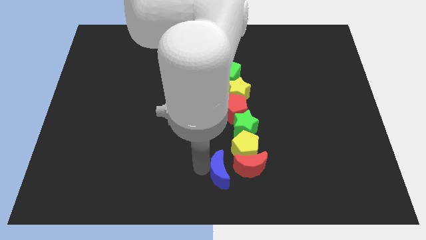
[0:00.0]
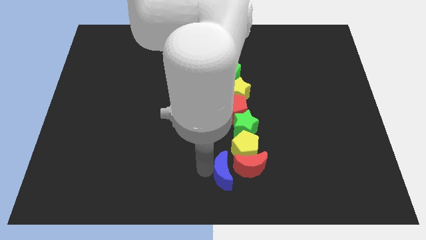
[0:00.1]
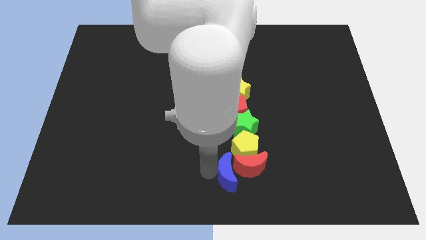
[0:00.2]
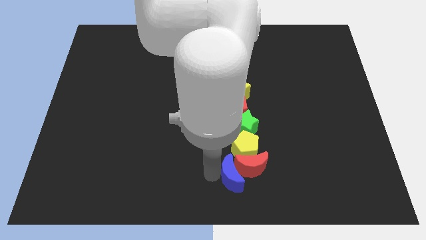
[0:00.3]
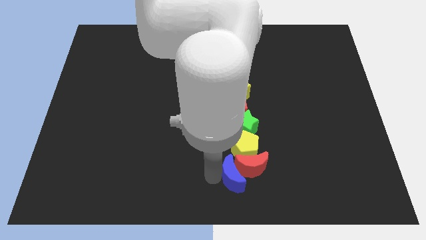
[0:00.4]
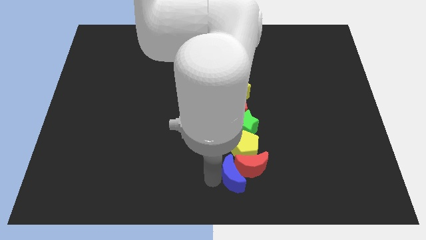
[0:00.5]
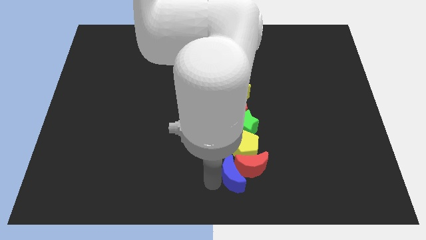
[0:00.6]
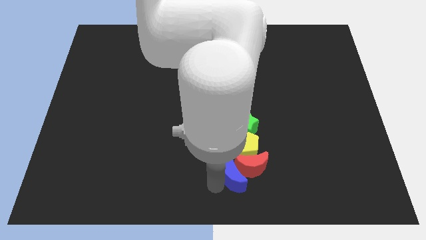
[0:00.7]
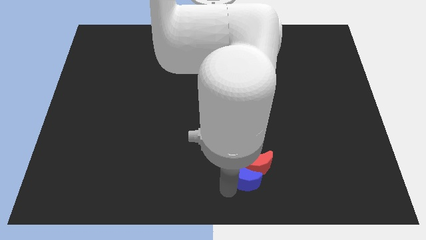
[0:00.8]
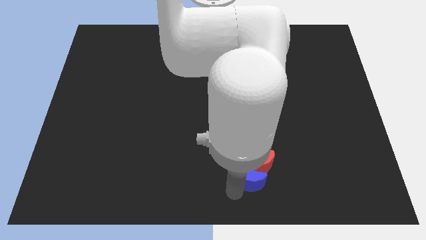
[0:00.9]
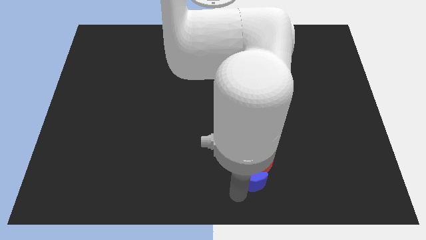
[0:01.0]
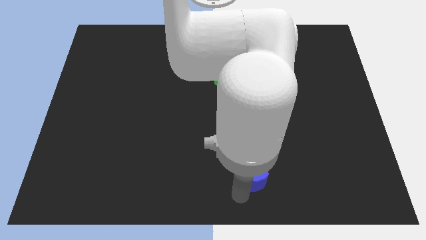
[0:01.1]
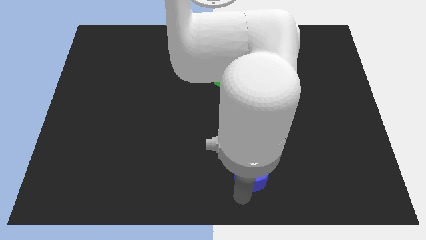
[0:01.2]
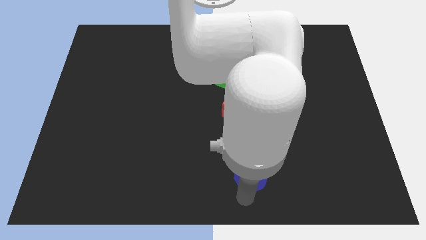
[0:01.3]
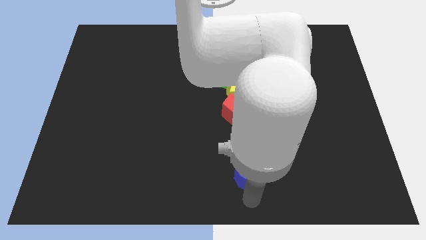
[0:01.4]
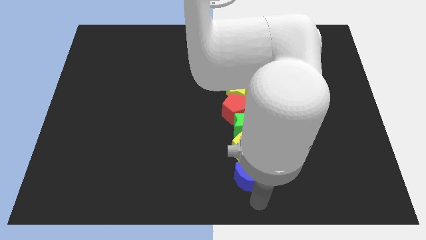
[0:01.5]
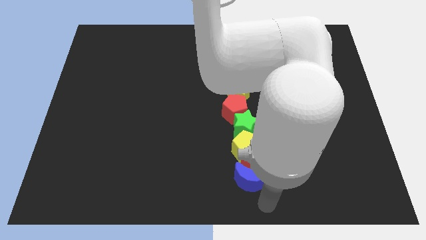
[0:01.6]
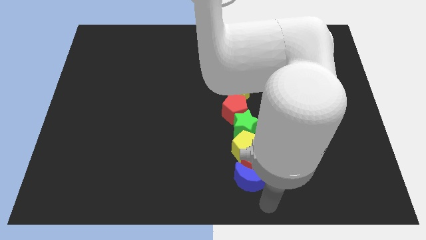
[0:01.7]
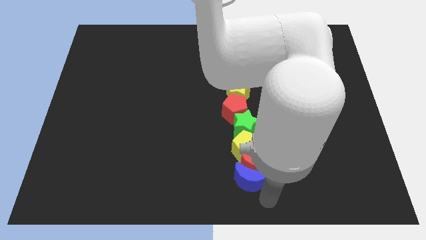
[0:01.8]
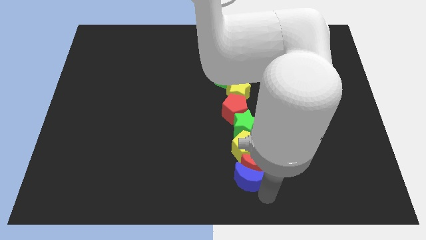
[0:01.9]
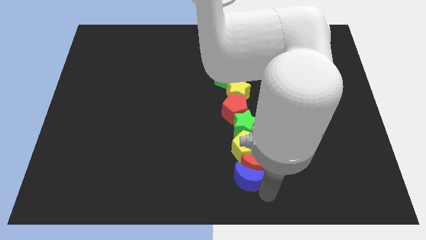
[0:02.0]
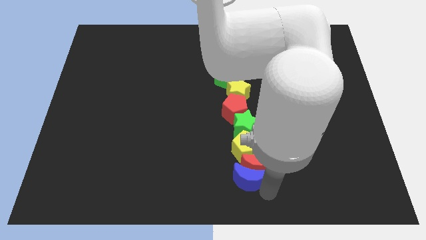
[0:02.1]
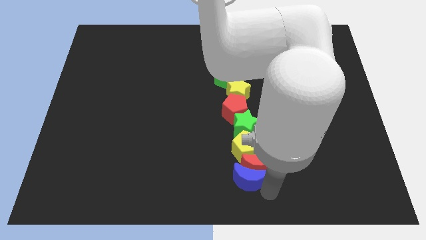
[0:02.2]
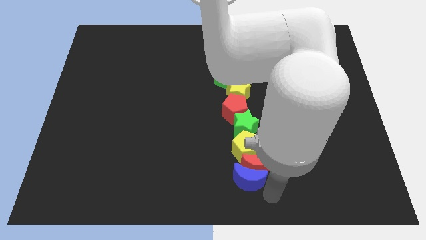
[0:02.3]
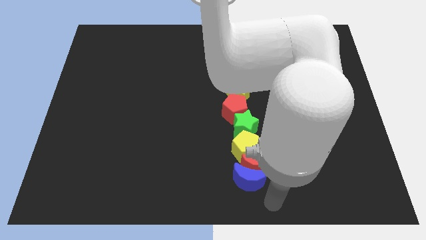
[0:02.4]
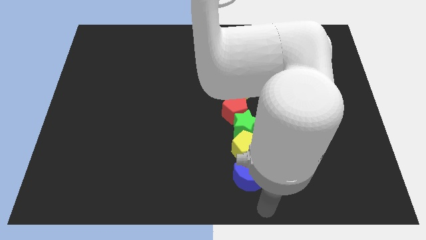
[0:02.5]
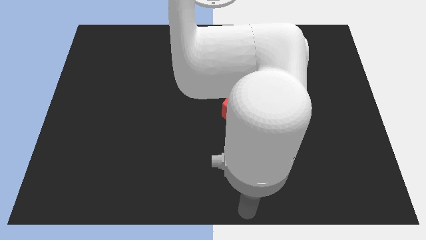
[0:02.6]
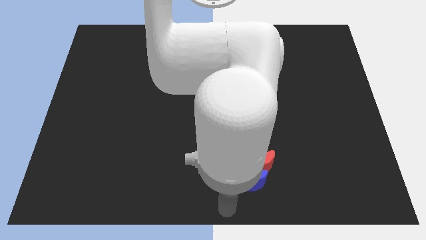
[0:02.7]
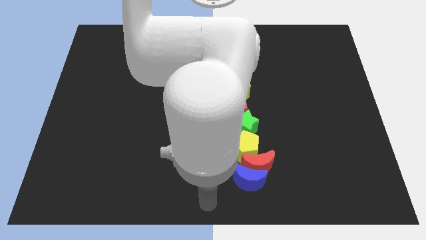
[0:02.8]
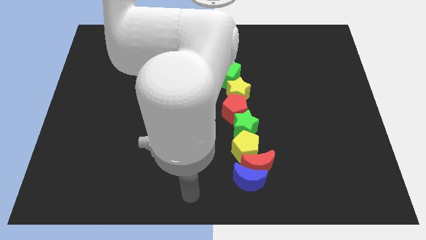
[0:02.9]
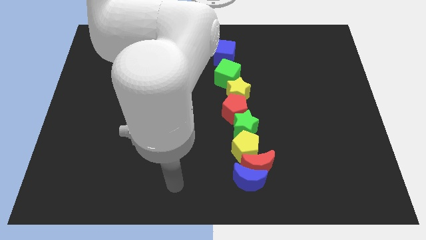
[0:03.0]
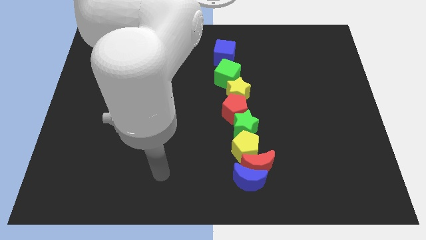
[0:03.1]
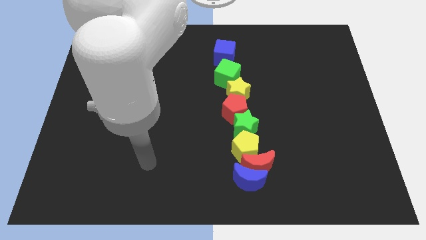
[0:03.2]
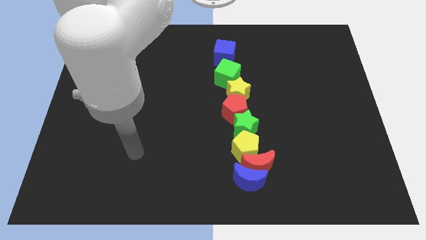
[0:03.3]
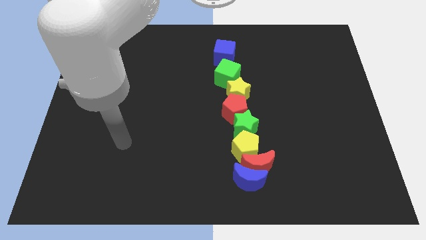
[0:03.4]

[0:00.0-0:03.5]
push the blue crescent into the bottom of the red crescent

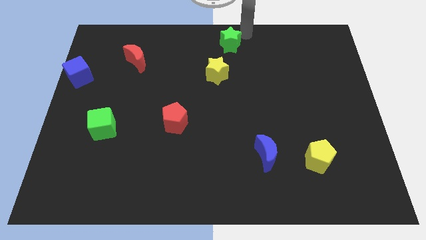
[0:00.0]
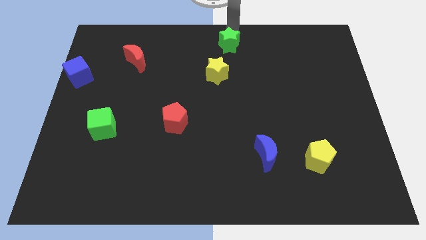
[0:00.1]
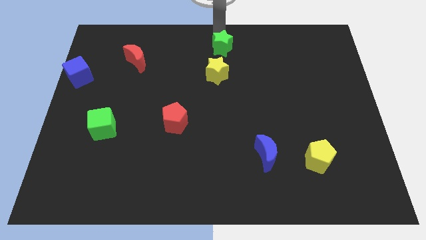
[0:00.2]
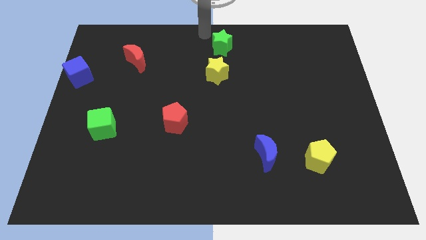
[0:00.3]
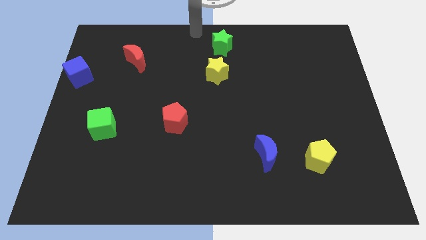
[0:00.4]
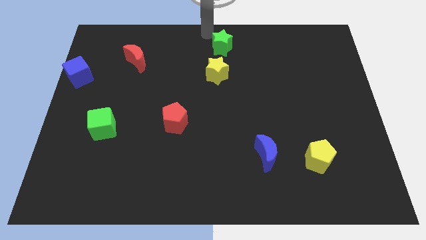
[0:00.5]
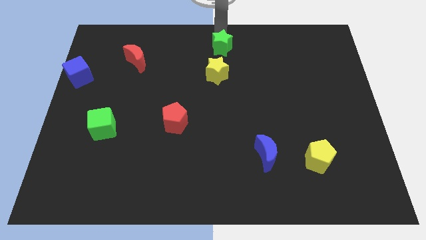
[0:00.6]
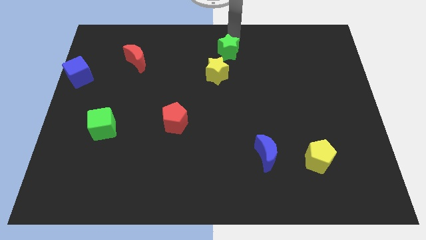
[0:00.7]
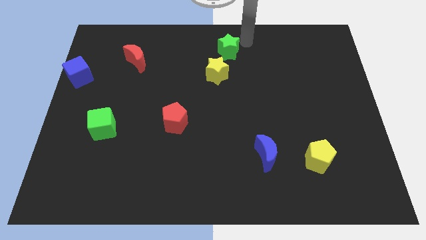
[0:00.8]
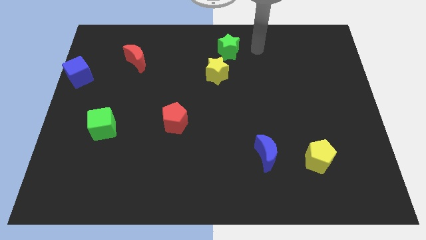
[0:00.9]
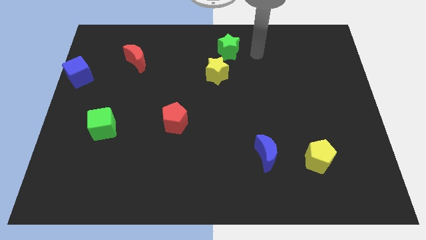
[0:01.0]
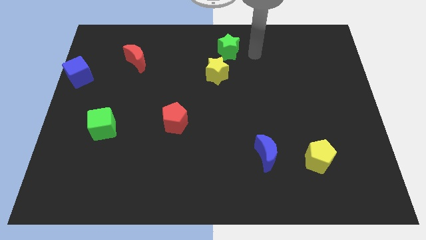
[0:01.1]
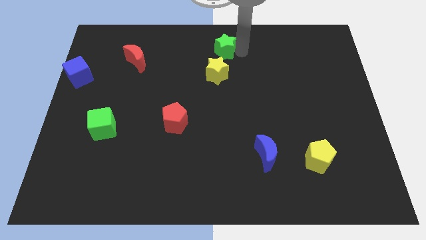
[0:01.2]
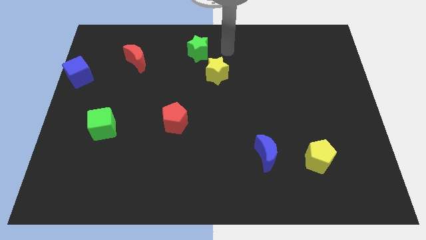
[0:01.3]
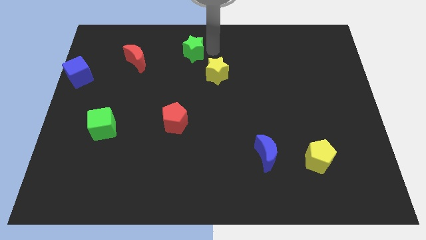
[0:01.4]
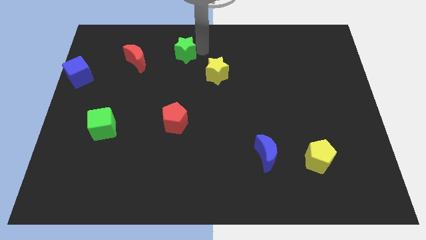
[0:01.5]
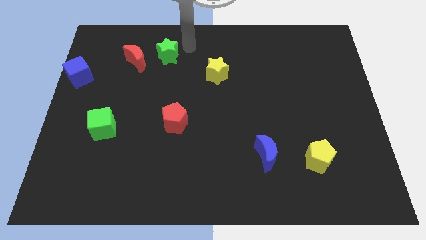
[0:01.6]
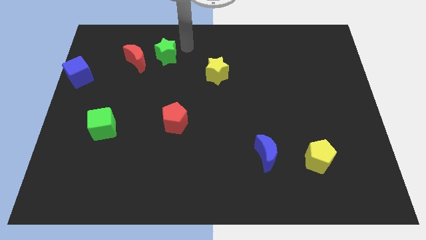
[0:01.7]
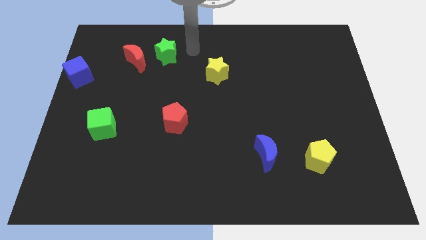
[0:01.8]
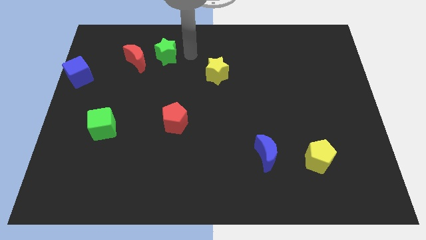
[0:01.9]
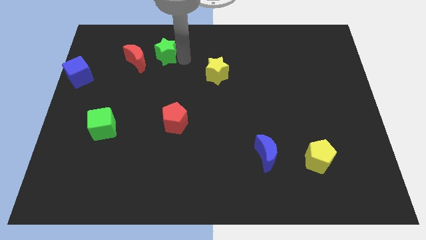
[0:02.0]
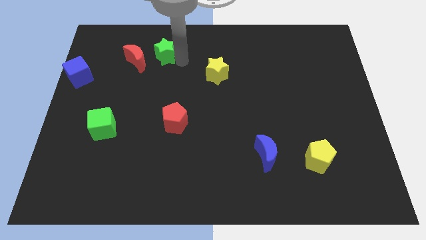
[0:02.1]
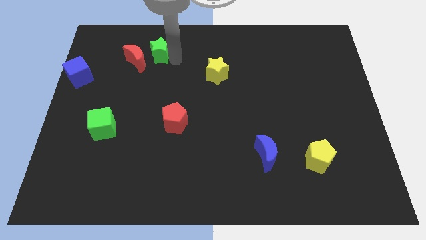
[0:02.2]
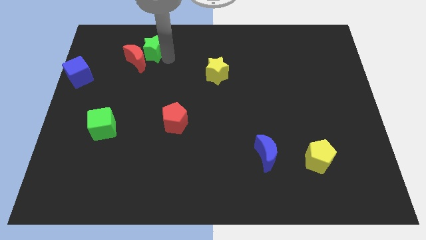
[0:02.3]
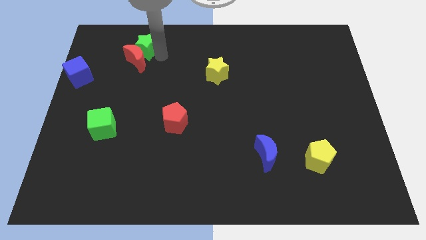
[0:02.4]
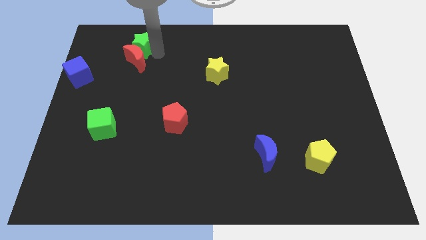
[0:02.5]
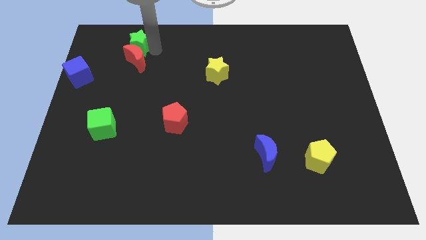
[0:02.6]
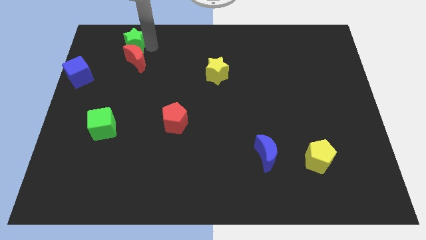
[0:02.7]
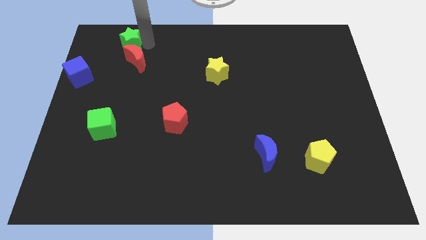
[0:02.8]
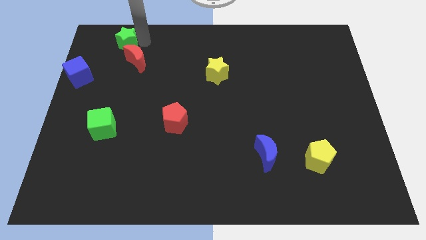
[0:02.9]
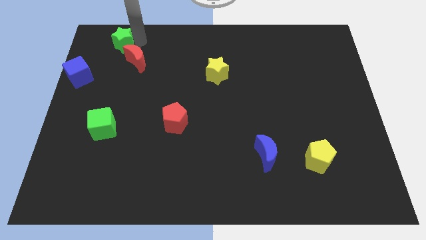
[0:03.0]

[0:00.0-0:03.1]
push green star to the top left of red moon

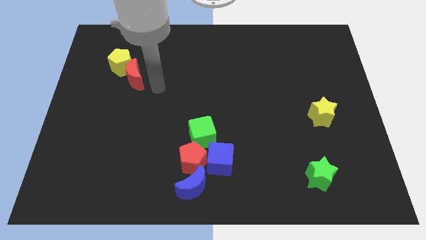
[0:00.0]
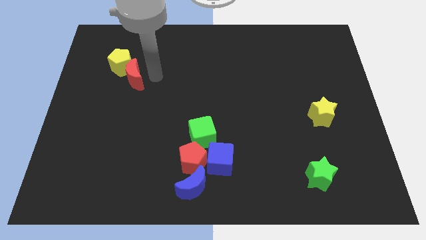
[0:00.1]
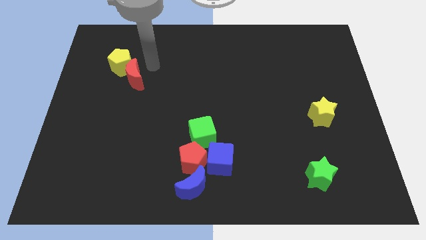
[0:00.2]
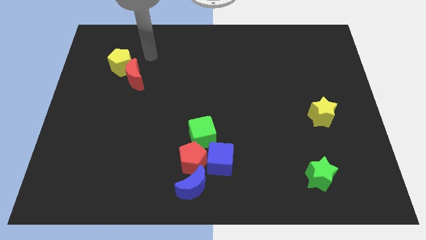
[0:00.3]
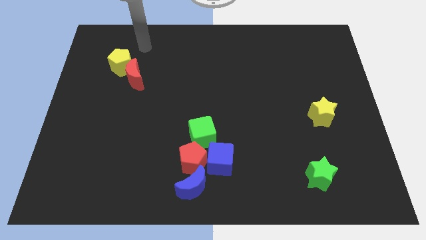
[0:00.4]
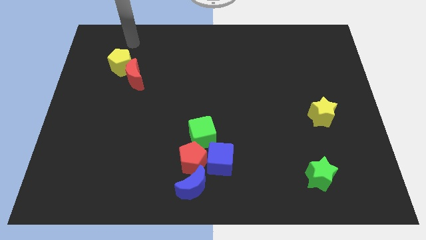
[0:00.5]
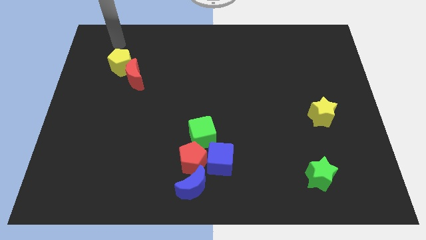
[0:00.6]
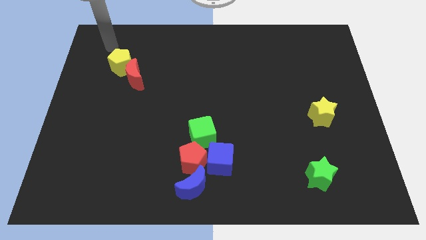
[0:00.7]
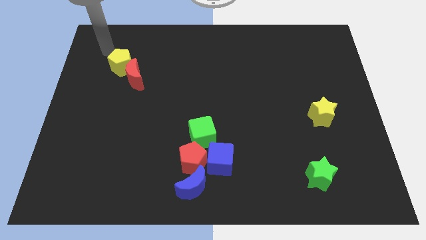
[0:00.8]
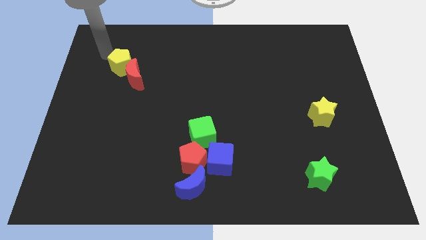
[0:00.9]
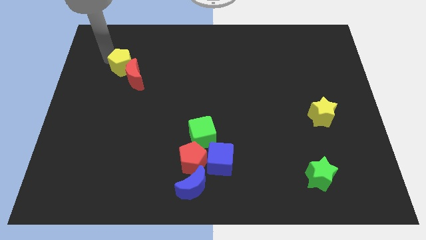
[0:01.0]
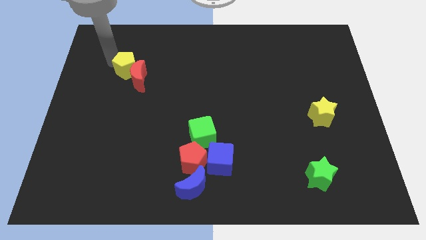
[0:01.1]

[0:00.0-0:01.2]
place your arm above yellow pentagon

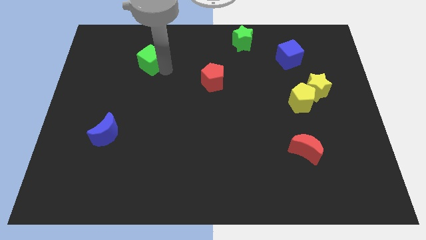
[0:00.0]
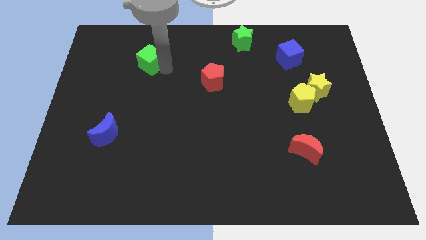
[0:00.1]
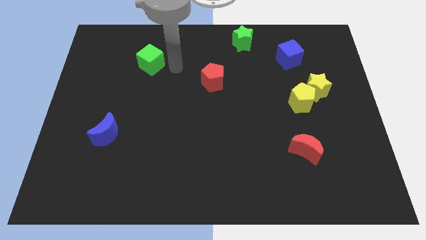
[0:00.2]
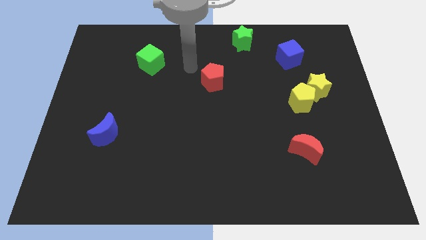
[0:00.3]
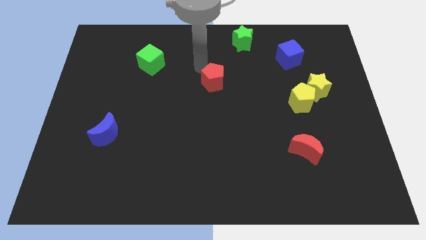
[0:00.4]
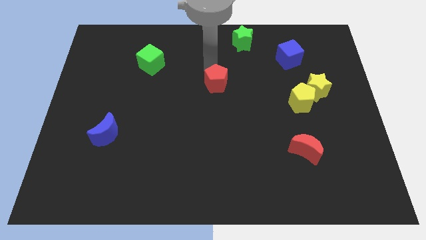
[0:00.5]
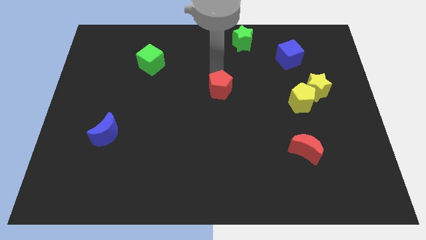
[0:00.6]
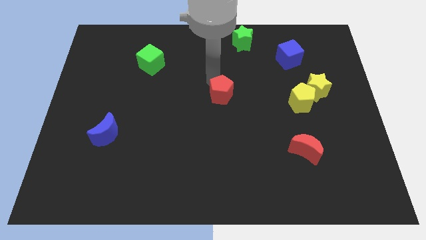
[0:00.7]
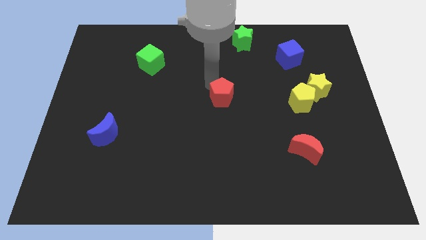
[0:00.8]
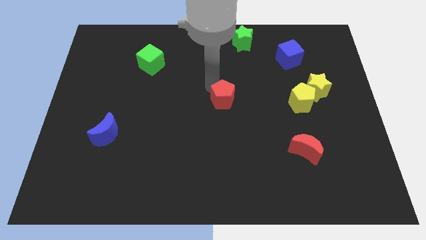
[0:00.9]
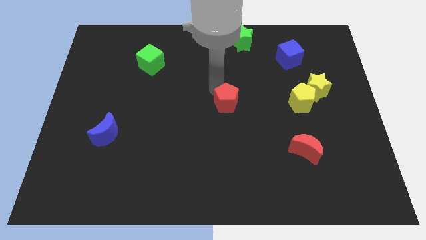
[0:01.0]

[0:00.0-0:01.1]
place the red pentagon at the center of the board
